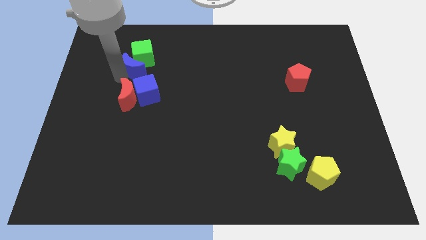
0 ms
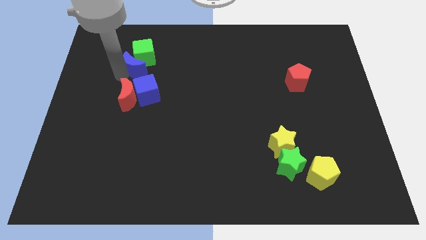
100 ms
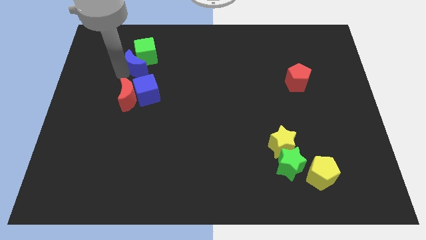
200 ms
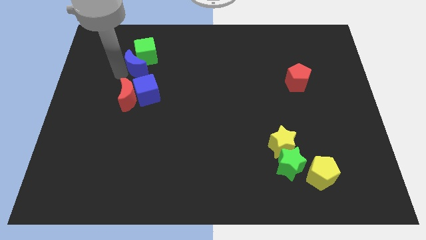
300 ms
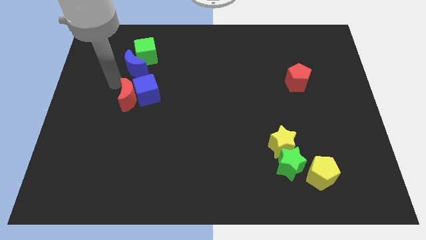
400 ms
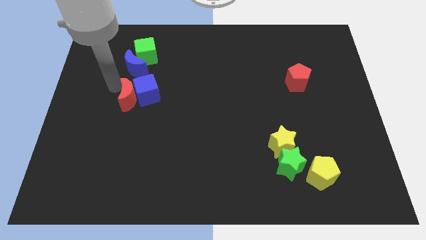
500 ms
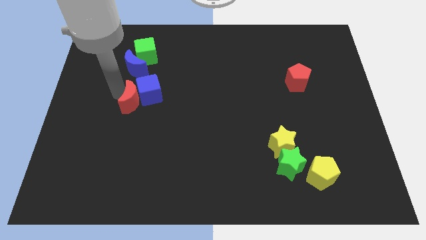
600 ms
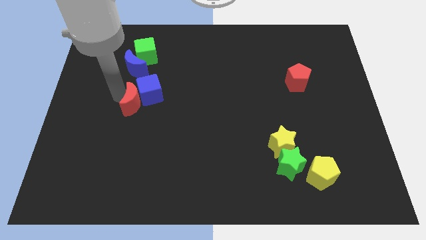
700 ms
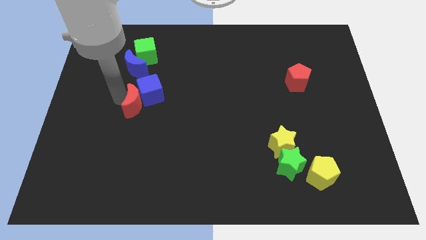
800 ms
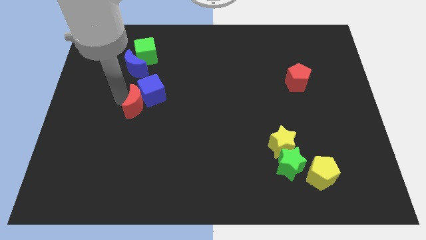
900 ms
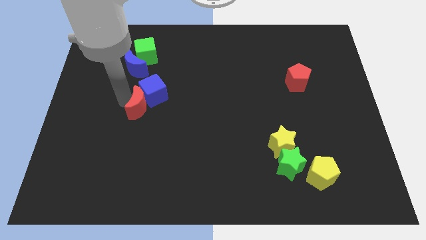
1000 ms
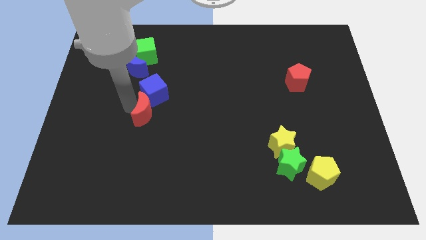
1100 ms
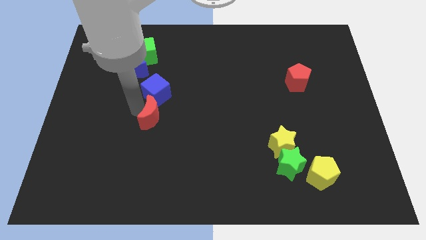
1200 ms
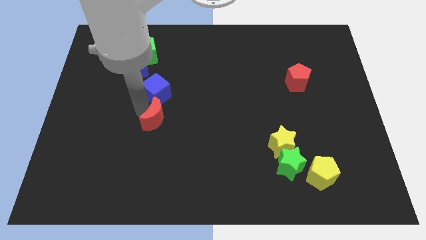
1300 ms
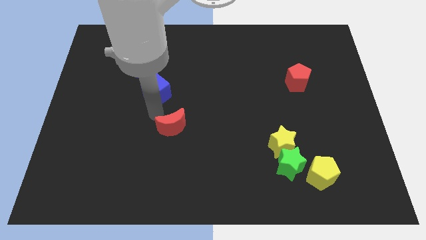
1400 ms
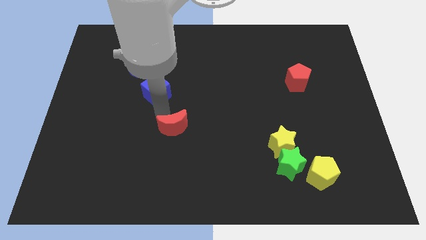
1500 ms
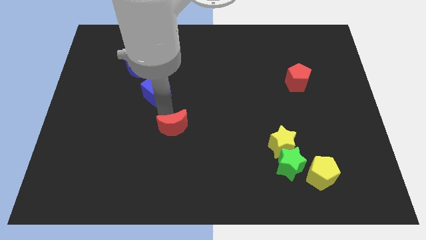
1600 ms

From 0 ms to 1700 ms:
move red moon away from blue cube

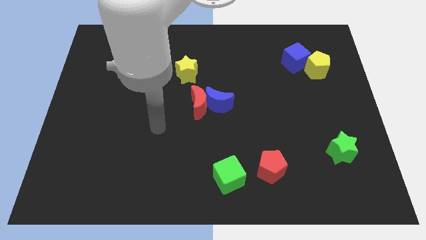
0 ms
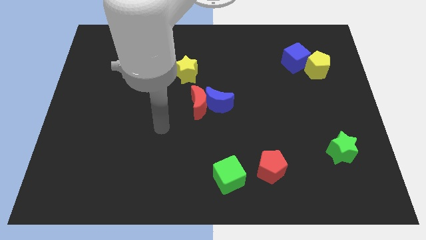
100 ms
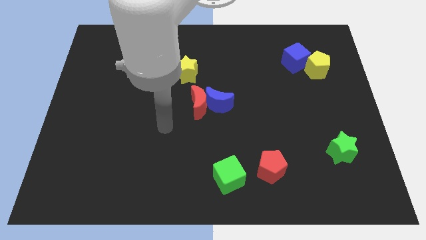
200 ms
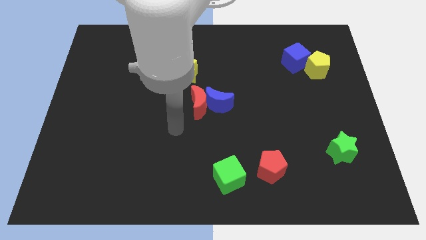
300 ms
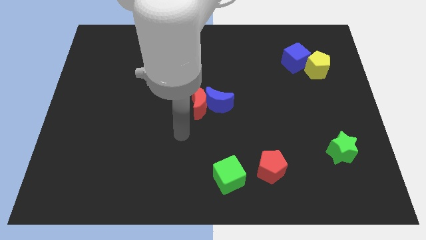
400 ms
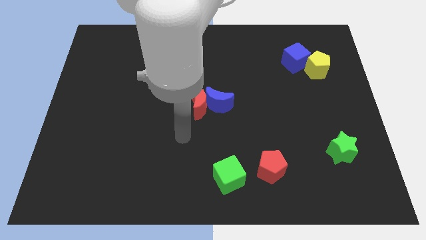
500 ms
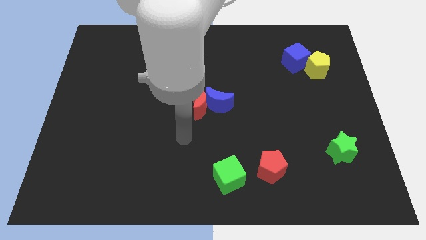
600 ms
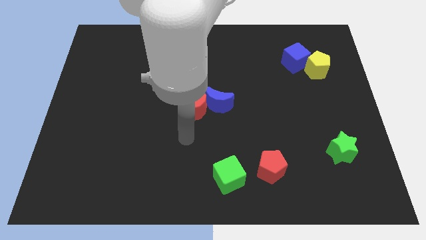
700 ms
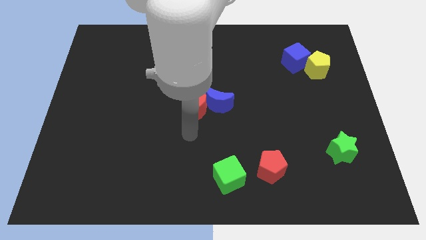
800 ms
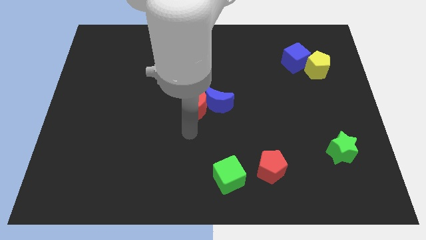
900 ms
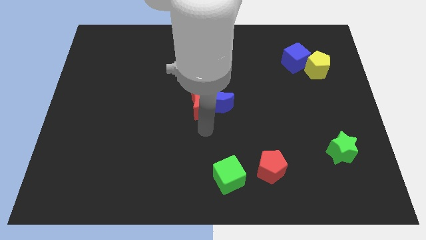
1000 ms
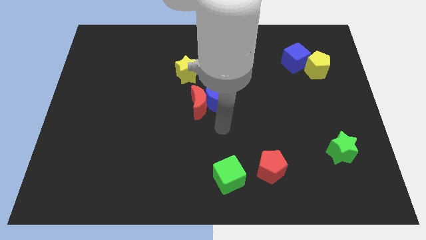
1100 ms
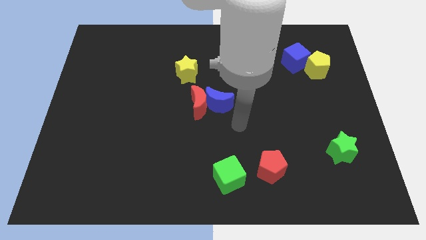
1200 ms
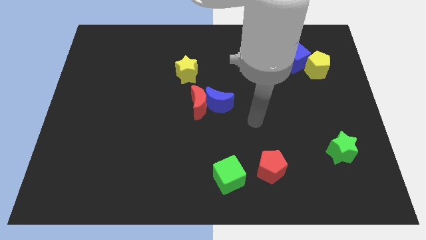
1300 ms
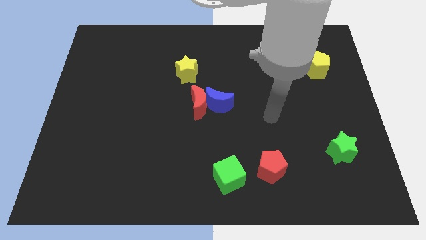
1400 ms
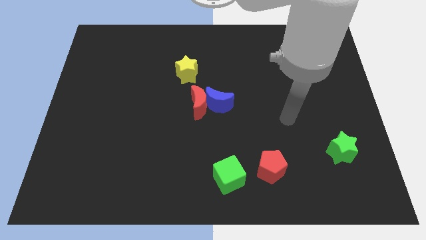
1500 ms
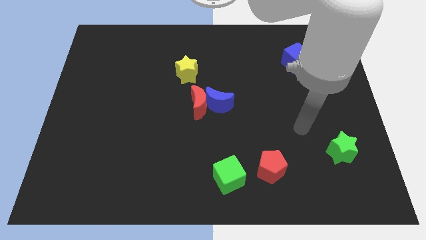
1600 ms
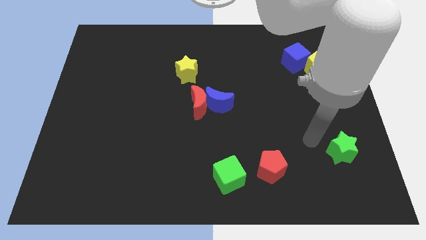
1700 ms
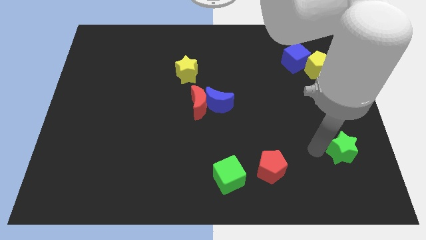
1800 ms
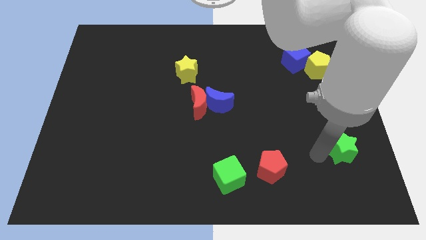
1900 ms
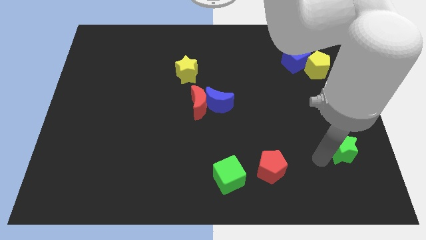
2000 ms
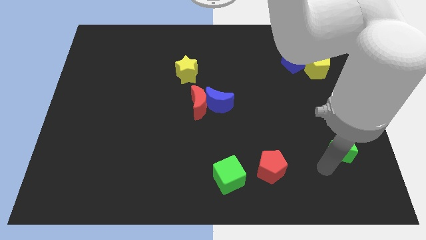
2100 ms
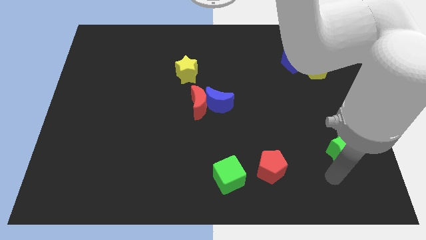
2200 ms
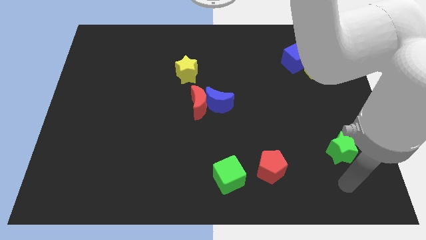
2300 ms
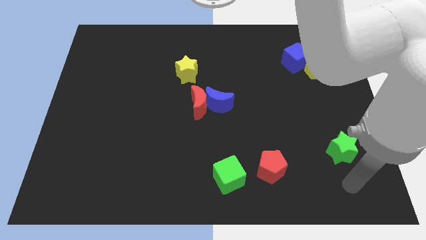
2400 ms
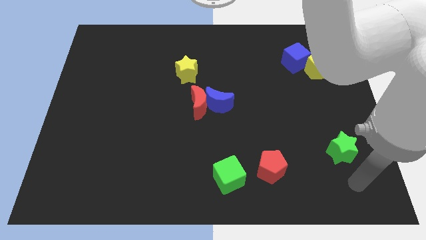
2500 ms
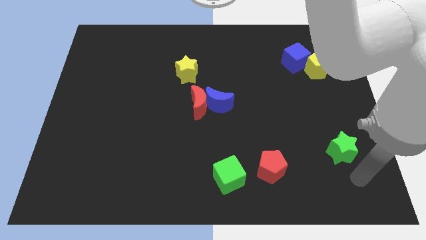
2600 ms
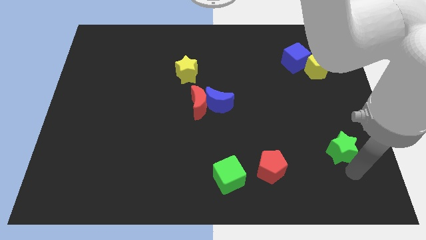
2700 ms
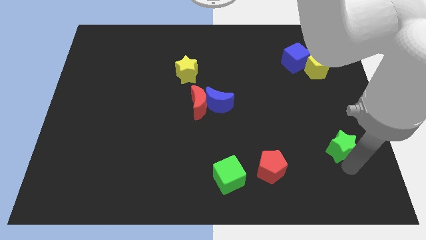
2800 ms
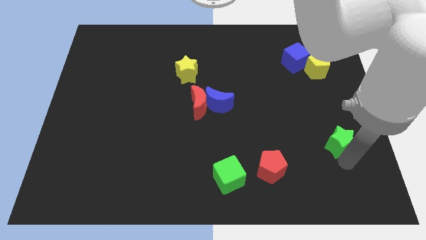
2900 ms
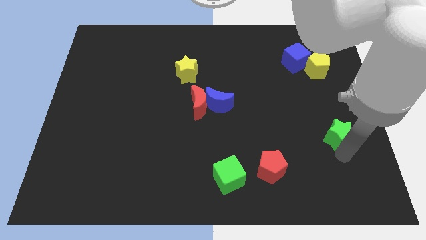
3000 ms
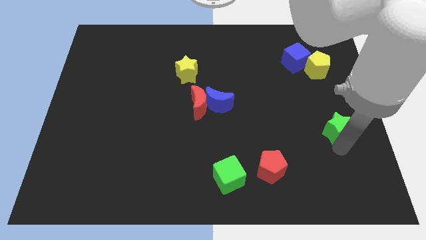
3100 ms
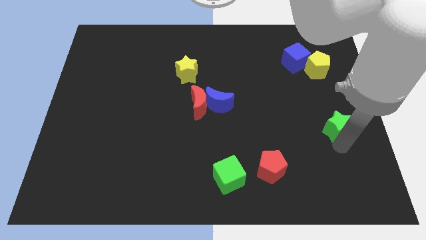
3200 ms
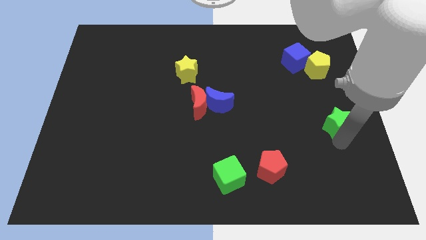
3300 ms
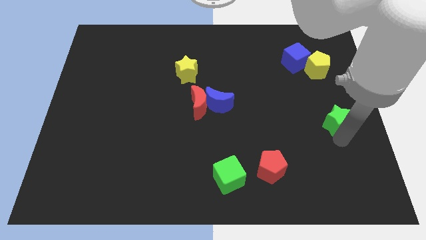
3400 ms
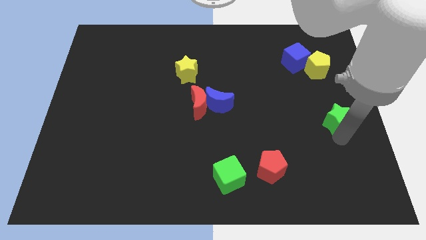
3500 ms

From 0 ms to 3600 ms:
move the green star towards upwards

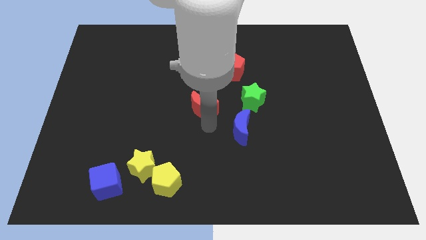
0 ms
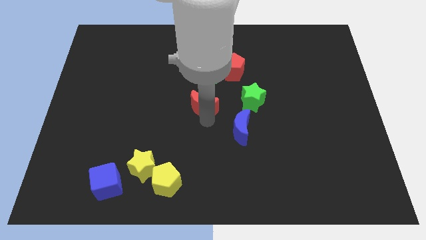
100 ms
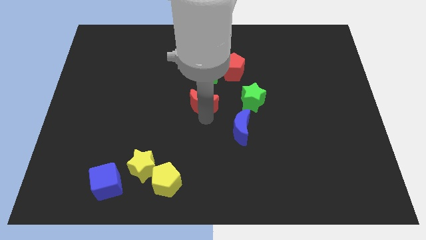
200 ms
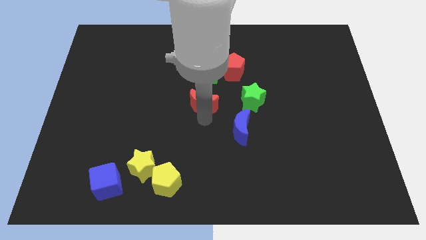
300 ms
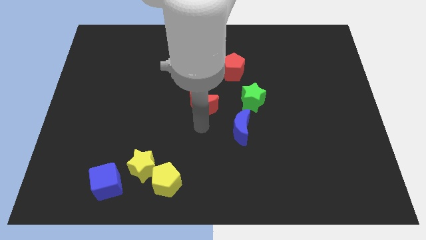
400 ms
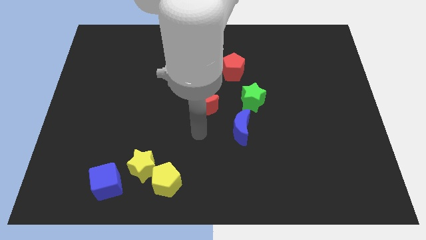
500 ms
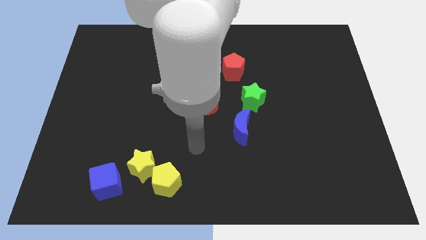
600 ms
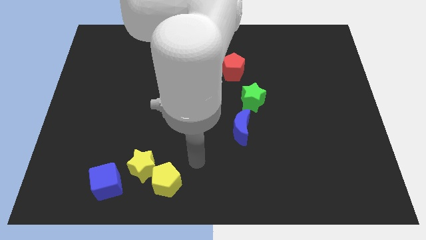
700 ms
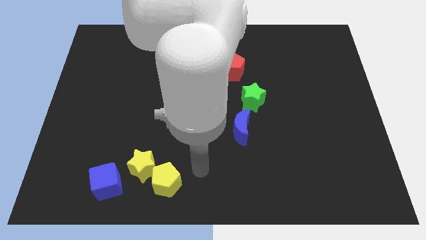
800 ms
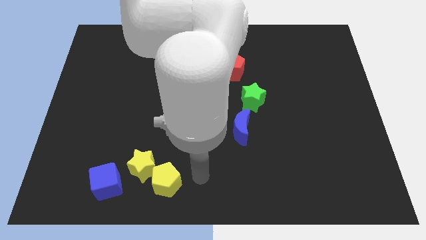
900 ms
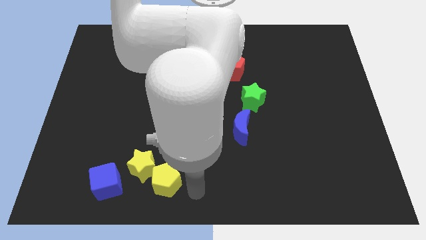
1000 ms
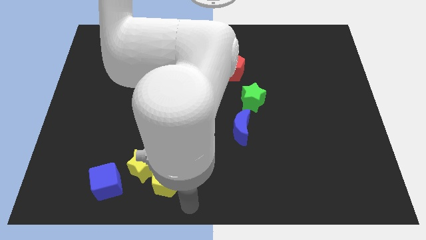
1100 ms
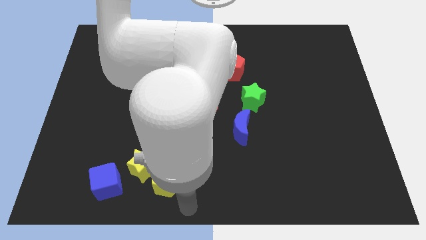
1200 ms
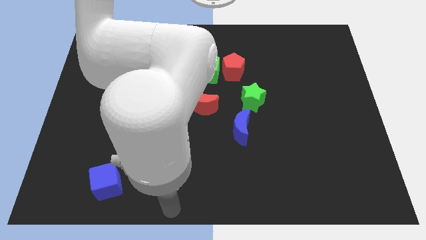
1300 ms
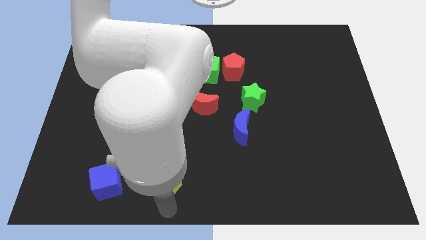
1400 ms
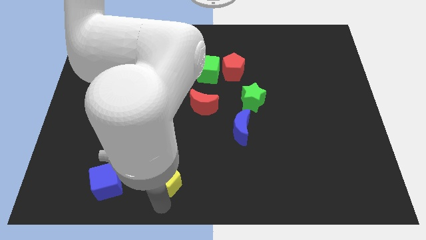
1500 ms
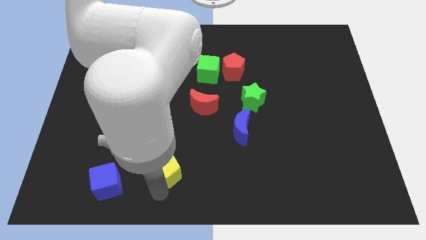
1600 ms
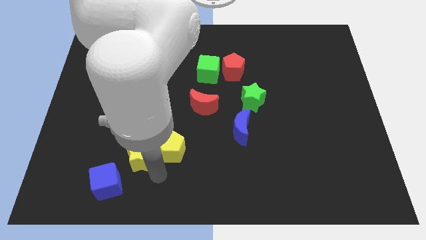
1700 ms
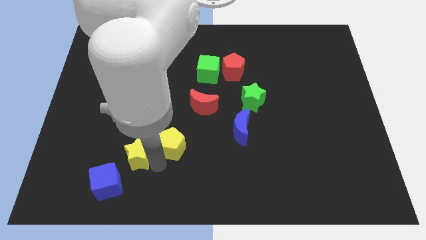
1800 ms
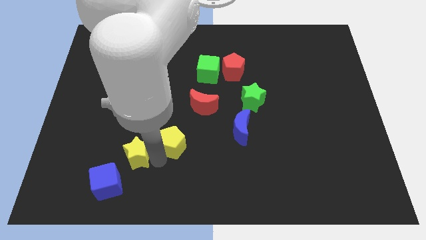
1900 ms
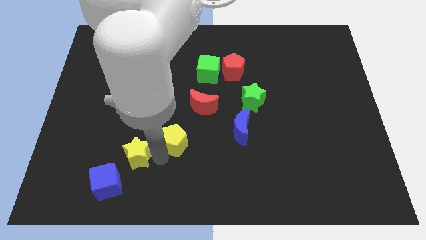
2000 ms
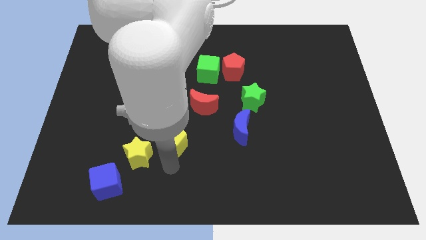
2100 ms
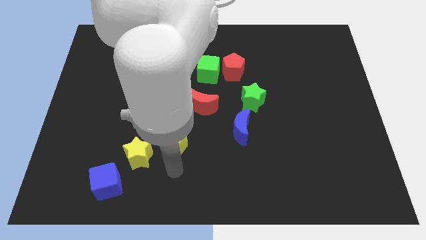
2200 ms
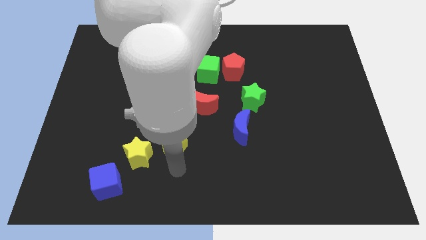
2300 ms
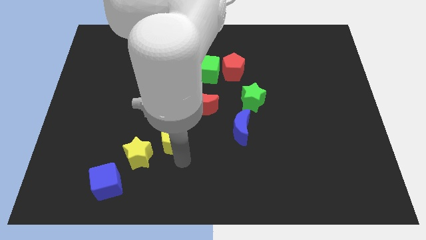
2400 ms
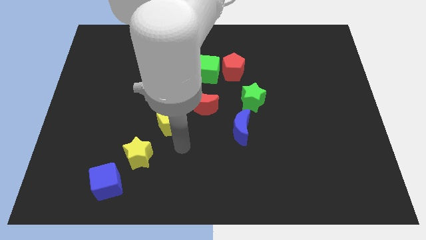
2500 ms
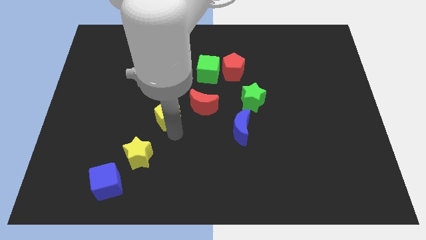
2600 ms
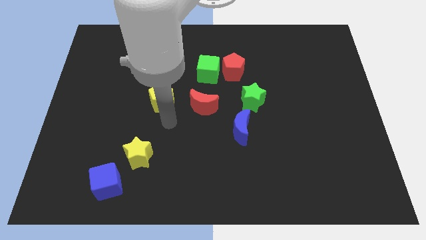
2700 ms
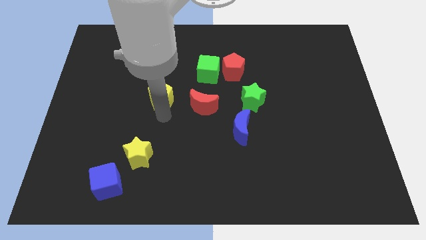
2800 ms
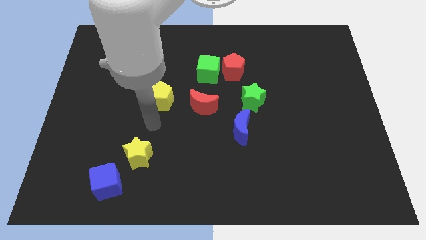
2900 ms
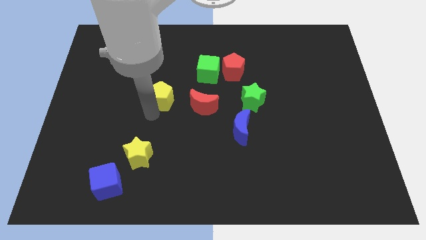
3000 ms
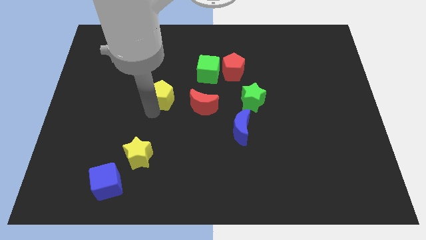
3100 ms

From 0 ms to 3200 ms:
place the yellow pentagon at the left side of the red crescent

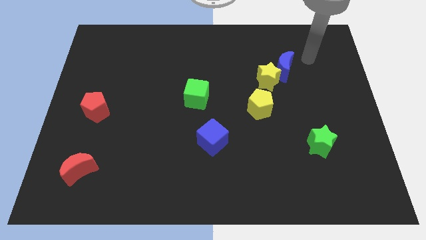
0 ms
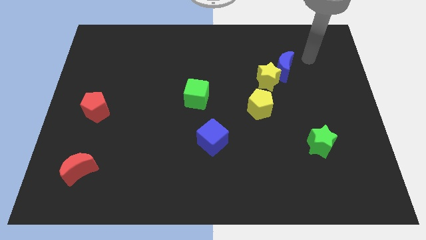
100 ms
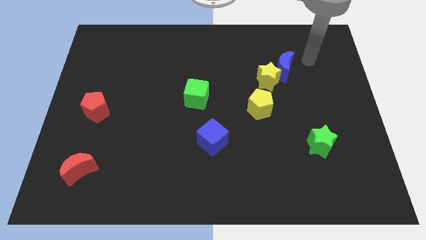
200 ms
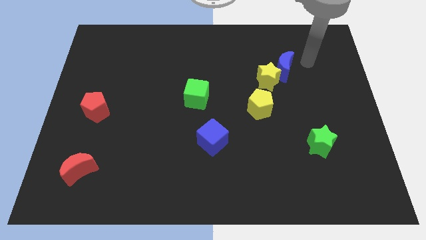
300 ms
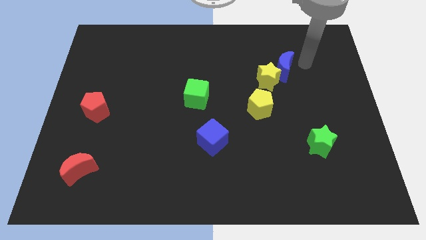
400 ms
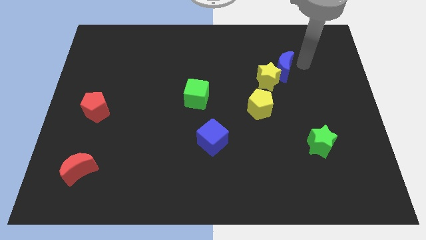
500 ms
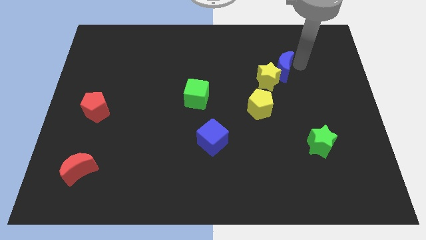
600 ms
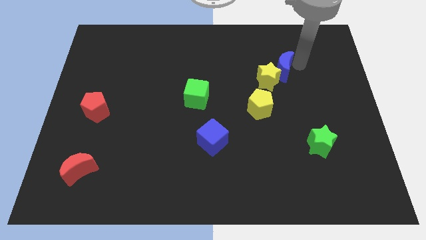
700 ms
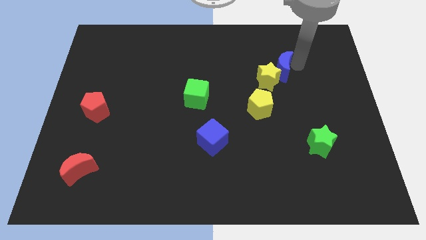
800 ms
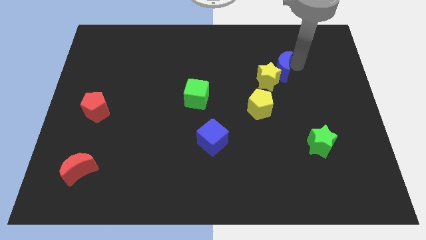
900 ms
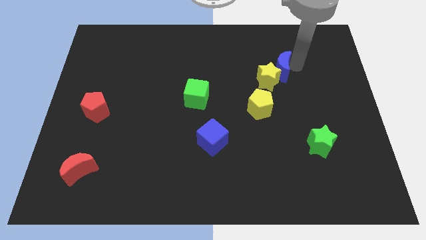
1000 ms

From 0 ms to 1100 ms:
touch the blue crescent at the right
